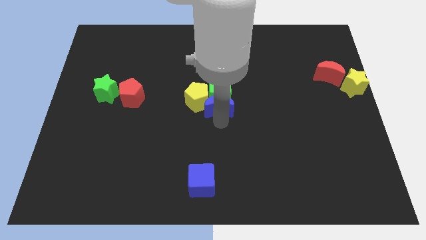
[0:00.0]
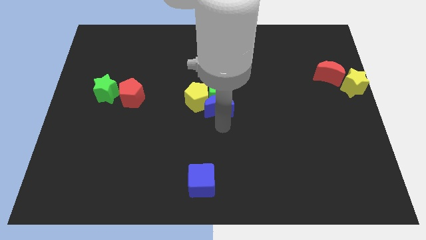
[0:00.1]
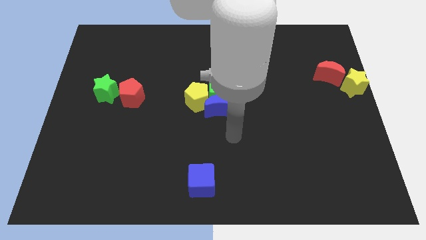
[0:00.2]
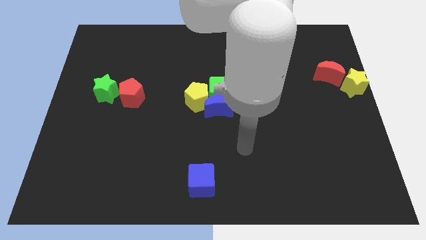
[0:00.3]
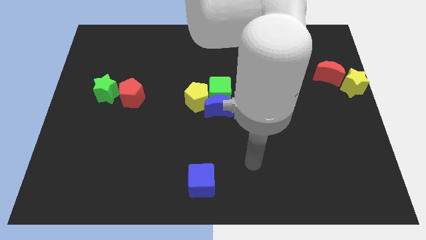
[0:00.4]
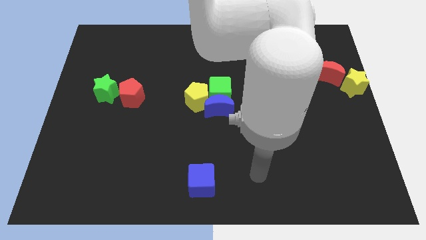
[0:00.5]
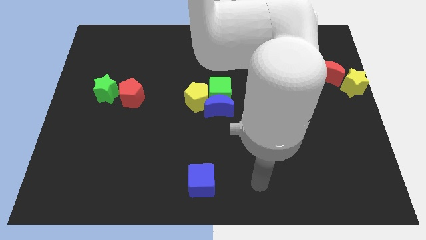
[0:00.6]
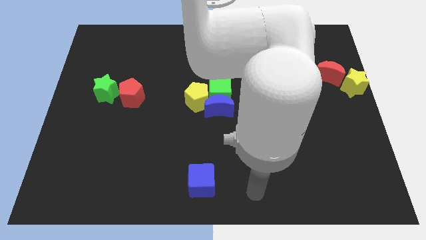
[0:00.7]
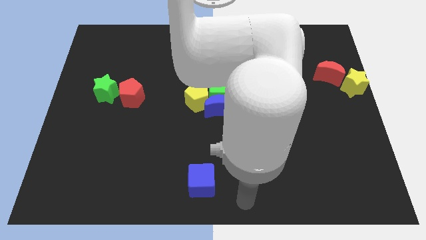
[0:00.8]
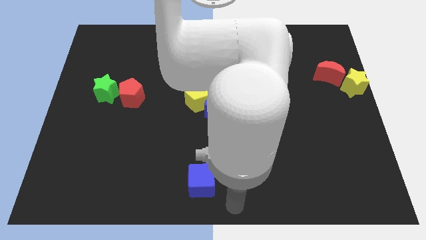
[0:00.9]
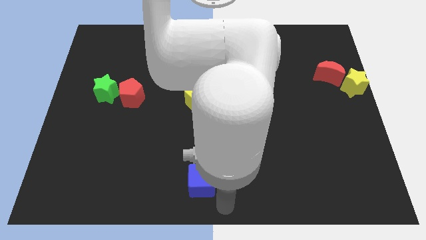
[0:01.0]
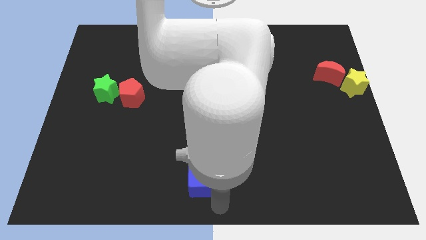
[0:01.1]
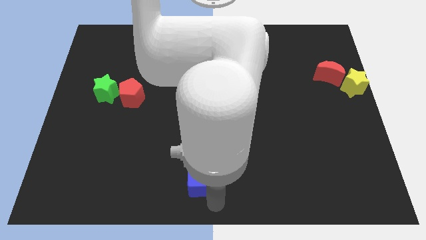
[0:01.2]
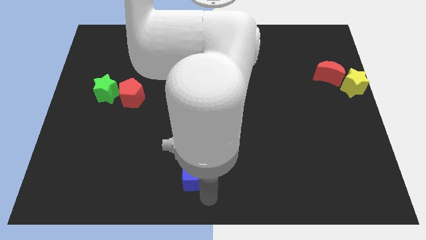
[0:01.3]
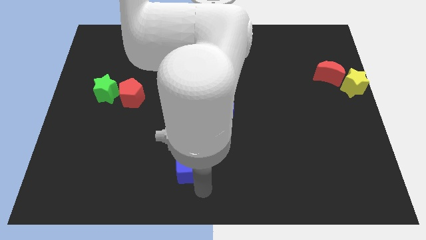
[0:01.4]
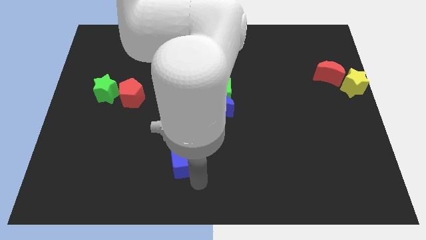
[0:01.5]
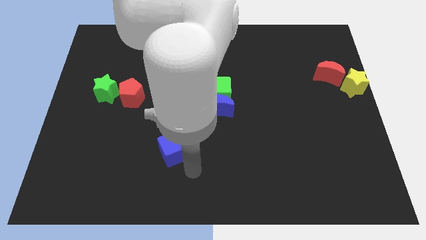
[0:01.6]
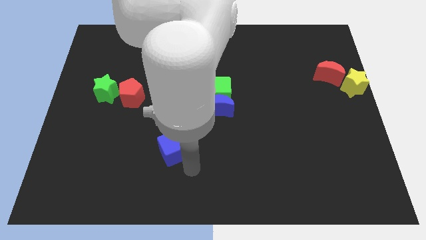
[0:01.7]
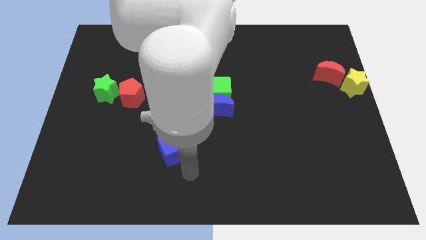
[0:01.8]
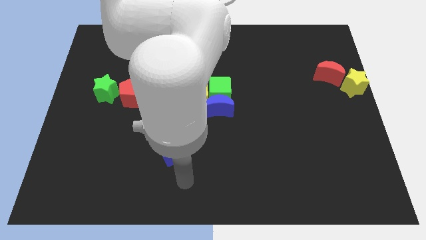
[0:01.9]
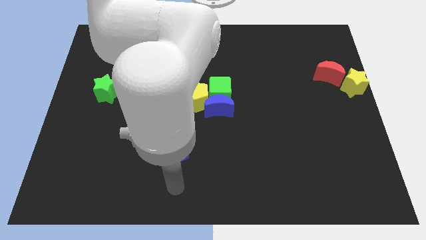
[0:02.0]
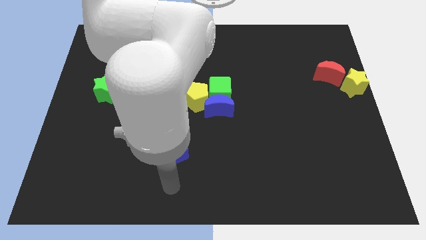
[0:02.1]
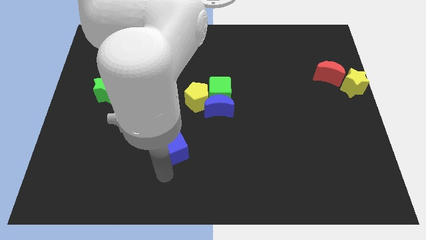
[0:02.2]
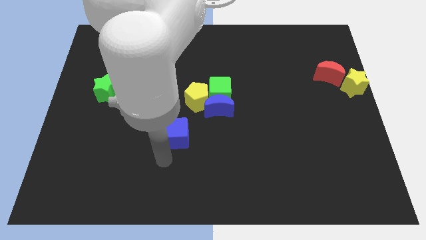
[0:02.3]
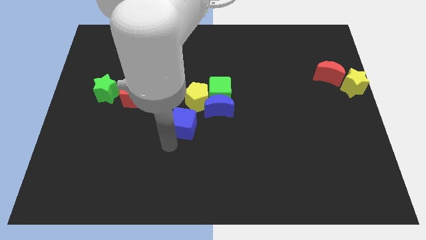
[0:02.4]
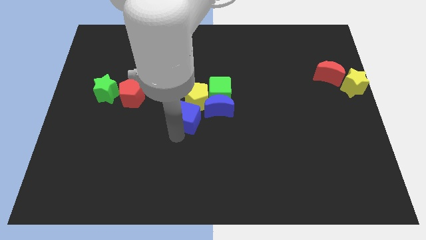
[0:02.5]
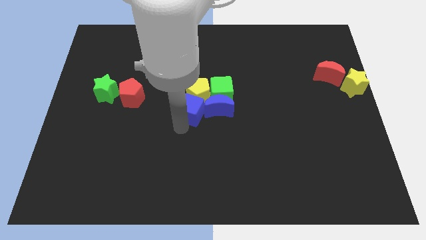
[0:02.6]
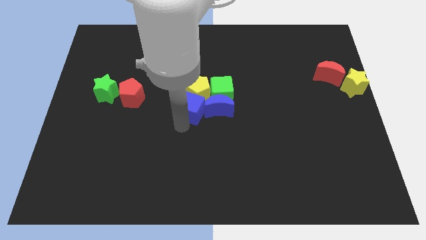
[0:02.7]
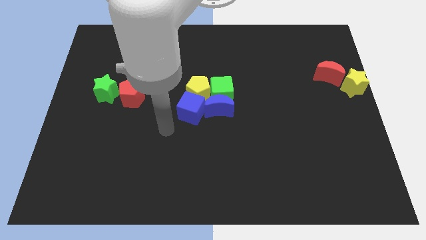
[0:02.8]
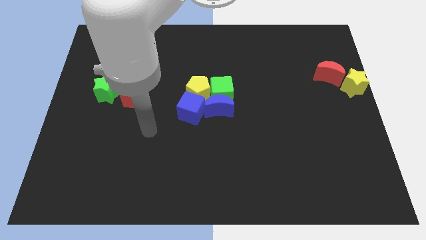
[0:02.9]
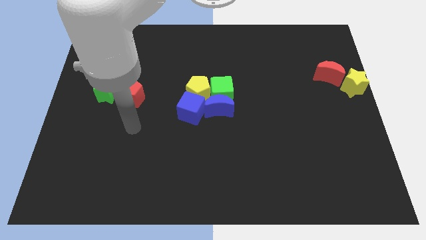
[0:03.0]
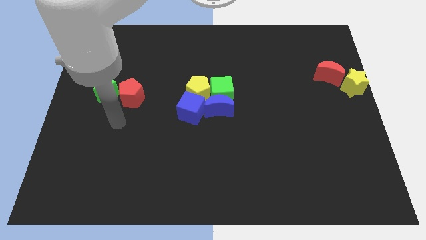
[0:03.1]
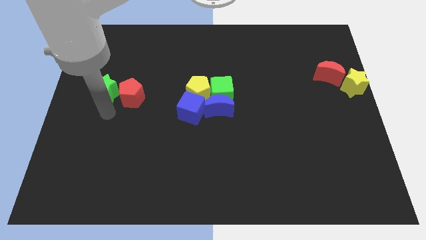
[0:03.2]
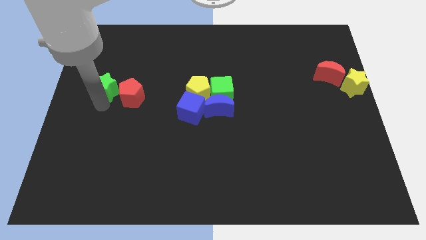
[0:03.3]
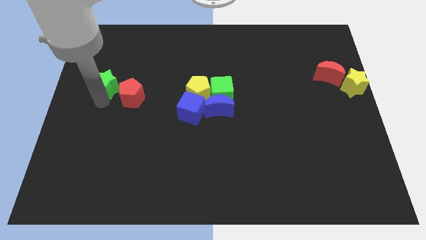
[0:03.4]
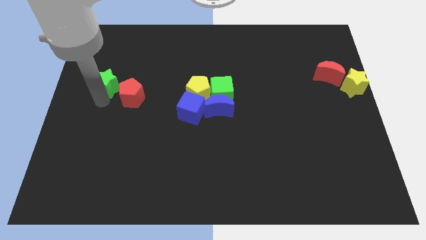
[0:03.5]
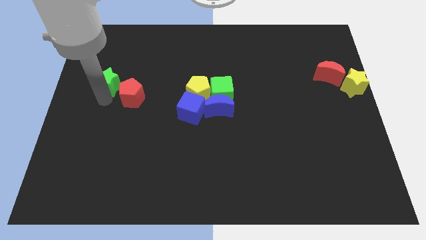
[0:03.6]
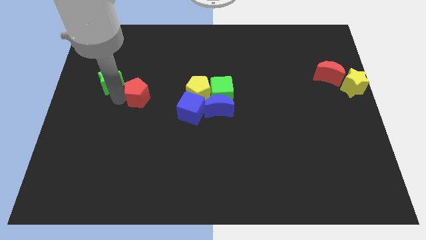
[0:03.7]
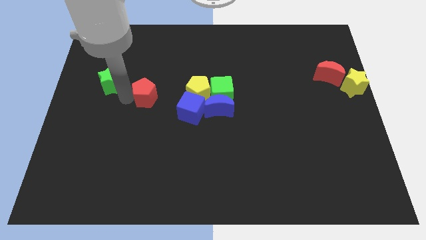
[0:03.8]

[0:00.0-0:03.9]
move the blue cube into the yellow pentagon

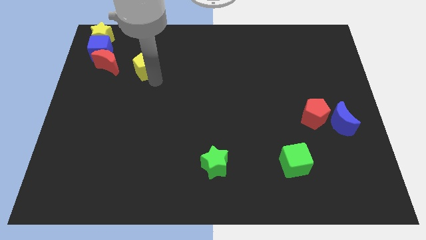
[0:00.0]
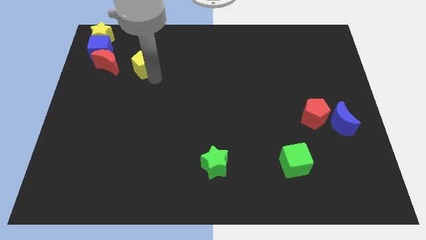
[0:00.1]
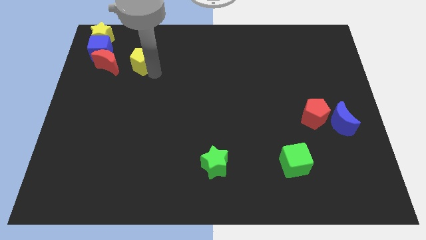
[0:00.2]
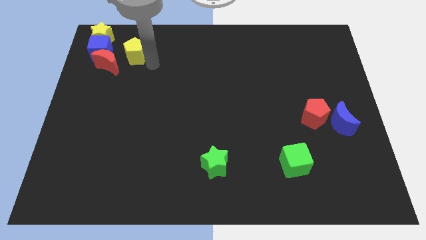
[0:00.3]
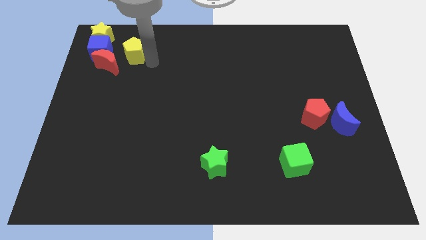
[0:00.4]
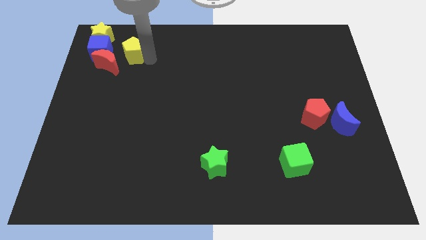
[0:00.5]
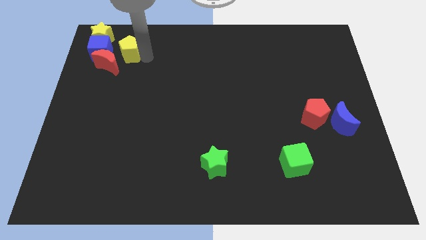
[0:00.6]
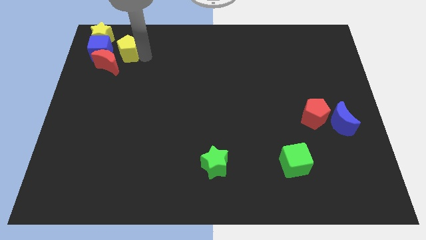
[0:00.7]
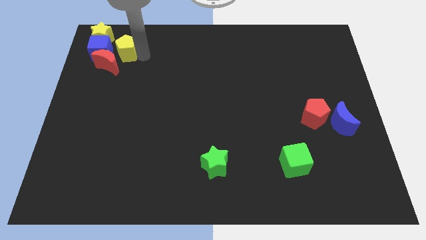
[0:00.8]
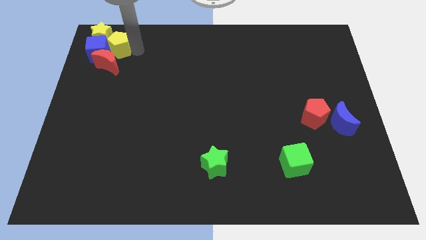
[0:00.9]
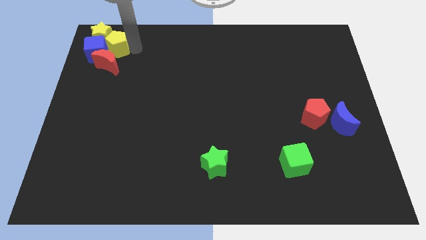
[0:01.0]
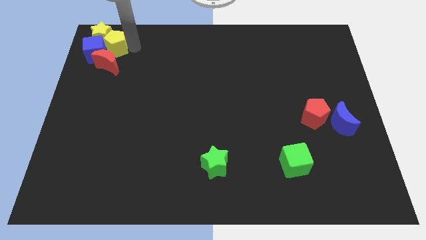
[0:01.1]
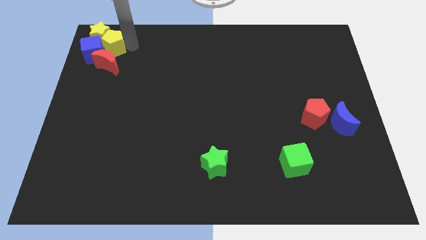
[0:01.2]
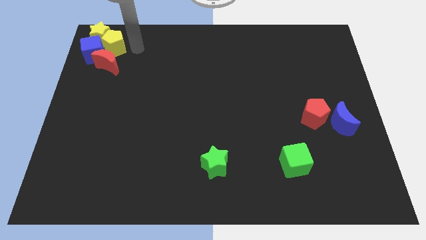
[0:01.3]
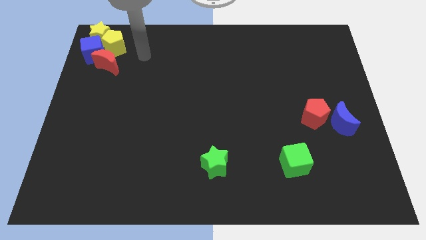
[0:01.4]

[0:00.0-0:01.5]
move the yellow pentagon into the group of blocks

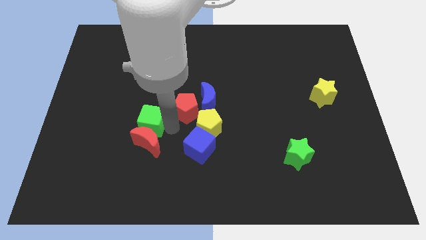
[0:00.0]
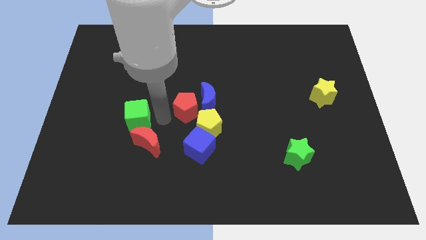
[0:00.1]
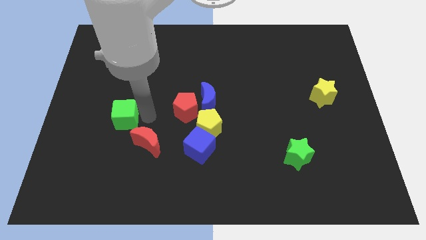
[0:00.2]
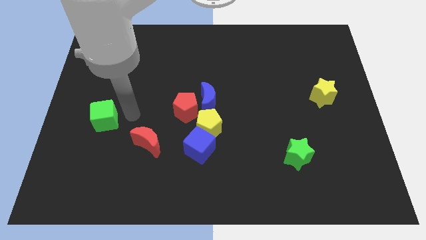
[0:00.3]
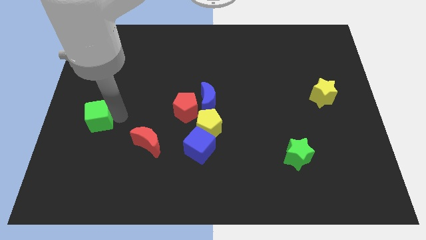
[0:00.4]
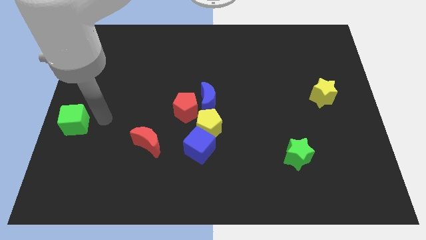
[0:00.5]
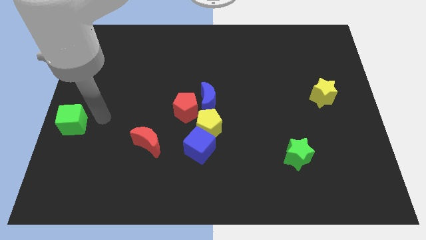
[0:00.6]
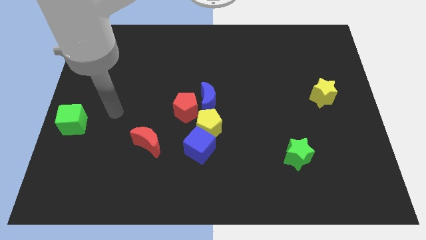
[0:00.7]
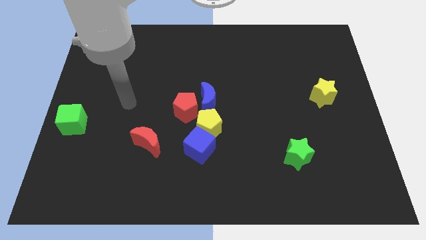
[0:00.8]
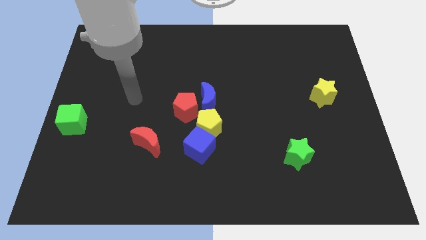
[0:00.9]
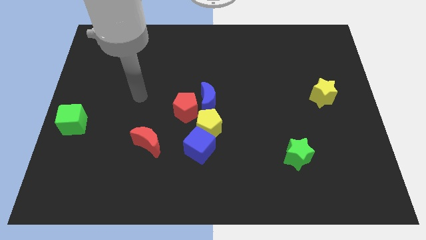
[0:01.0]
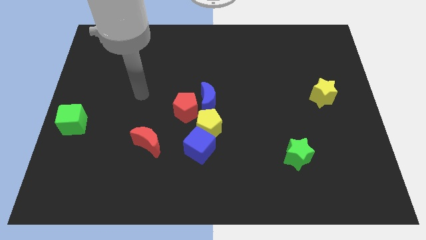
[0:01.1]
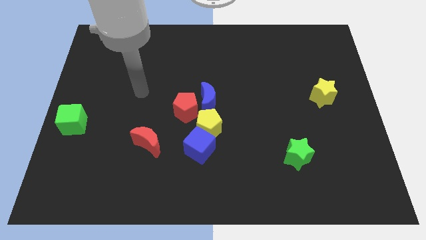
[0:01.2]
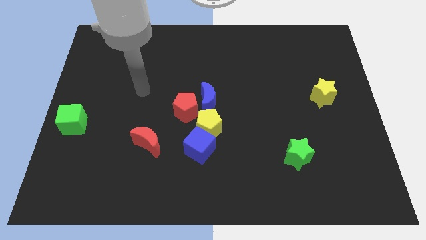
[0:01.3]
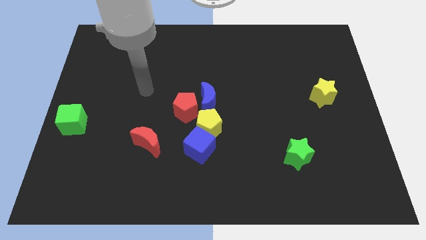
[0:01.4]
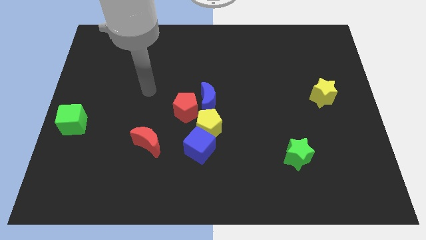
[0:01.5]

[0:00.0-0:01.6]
move the green cube to the center left side on the board

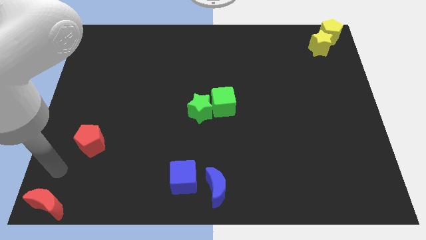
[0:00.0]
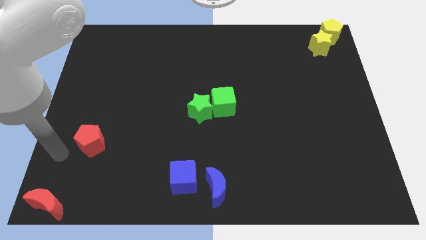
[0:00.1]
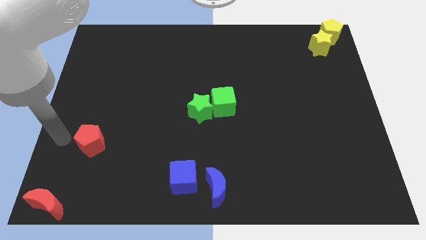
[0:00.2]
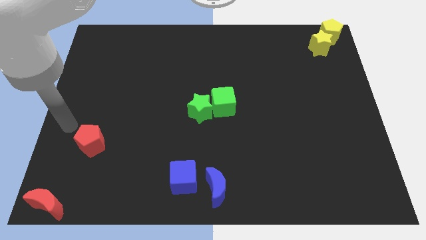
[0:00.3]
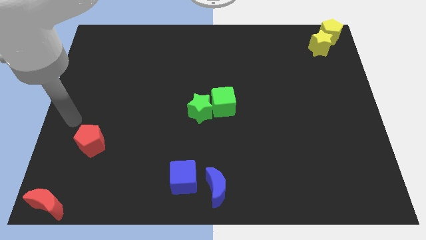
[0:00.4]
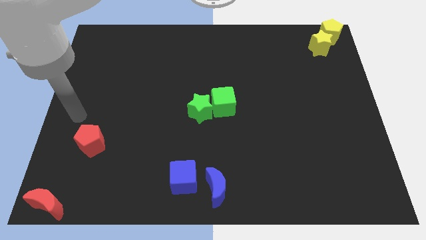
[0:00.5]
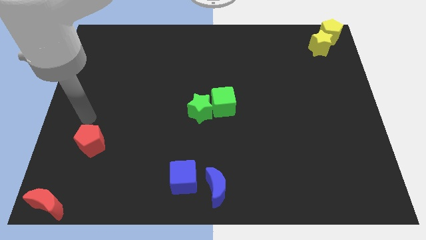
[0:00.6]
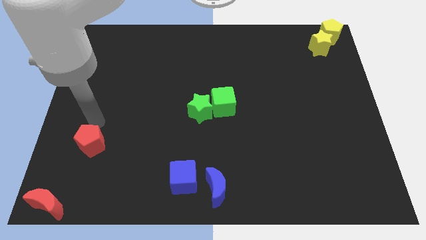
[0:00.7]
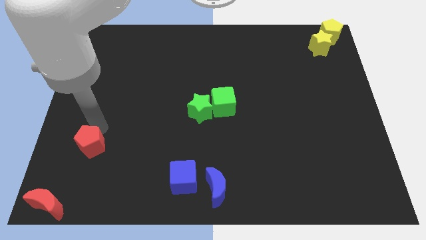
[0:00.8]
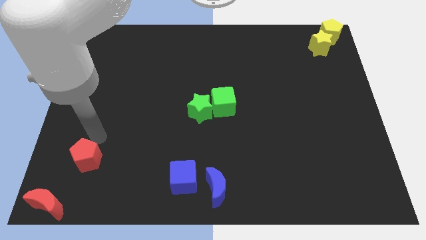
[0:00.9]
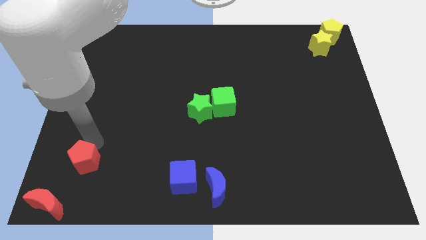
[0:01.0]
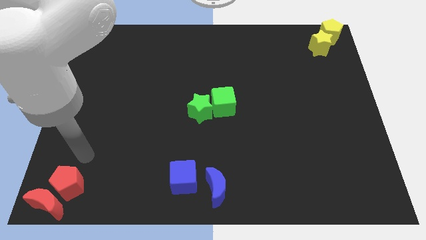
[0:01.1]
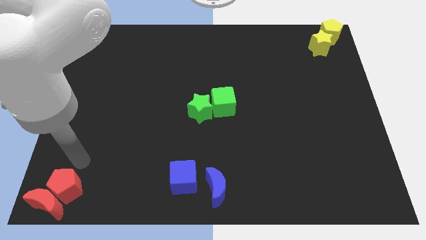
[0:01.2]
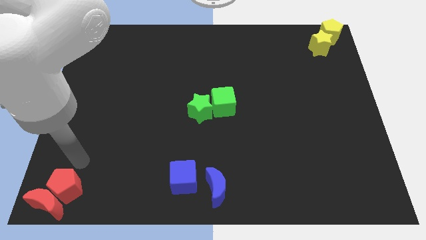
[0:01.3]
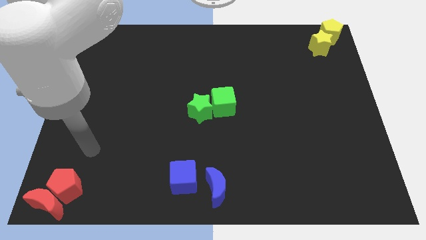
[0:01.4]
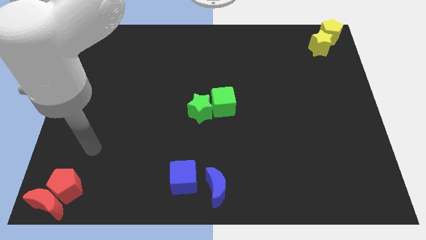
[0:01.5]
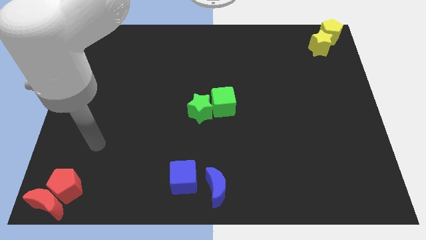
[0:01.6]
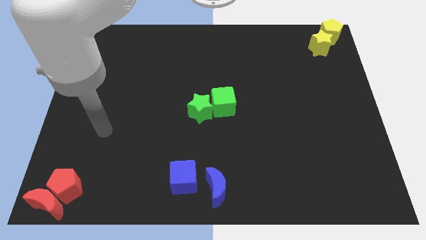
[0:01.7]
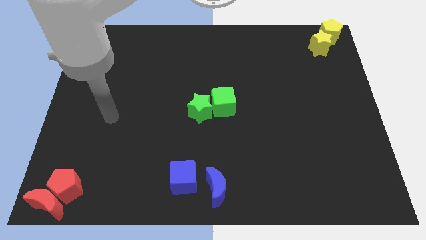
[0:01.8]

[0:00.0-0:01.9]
move the red pentagon towards the left bottom of the board

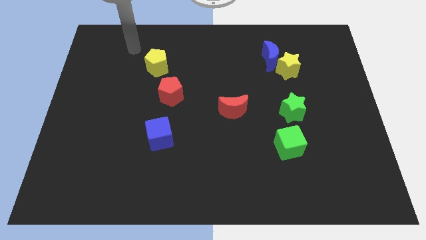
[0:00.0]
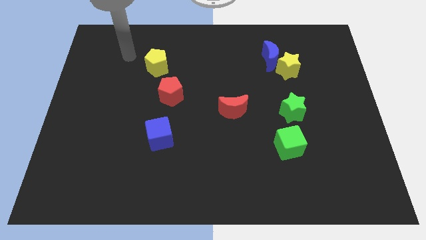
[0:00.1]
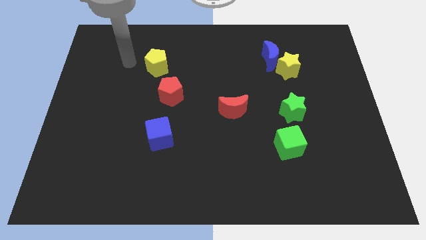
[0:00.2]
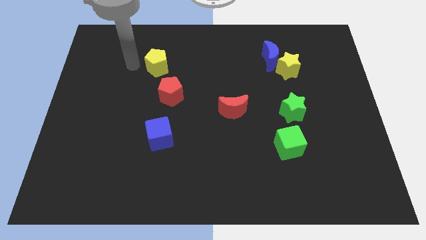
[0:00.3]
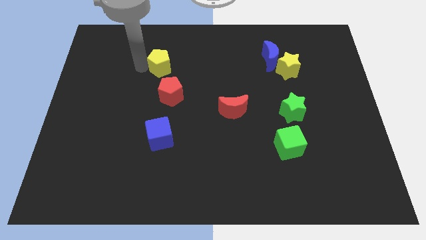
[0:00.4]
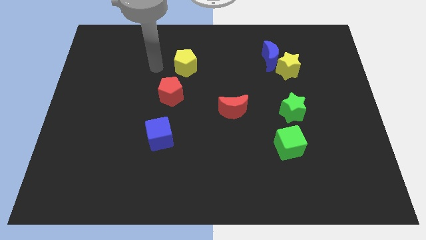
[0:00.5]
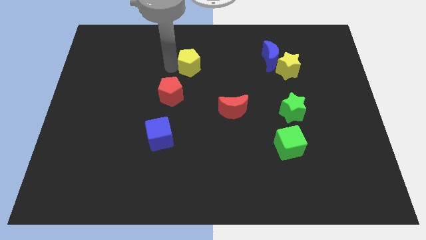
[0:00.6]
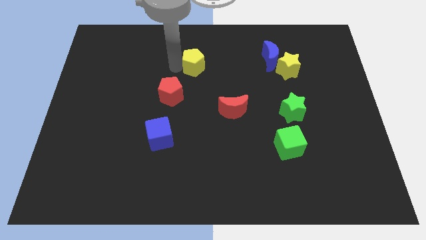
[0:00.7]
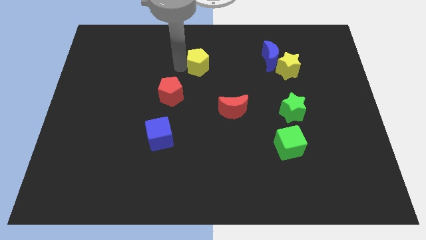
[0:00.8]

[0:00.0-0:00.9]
place yellow pentagon to the top right corner of the red pentagon
